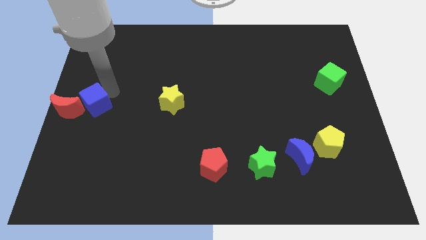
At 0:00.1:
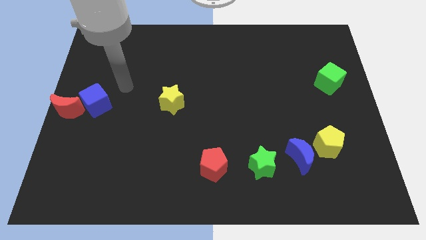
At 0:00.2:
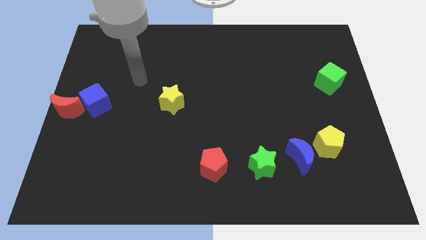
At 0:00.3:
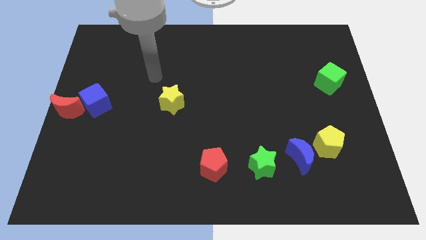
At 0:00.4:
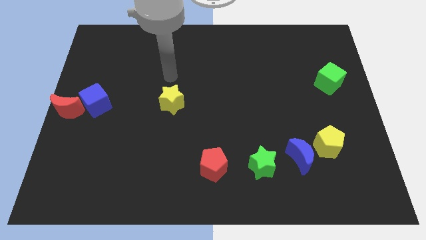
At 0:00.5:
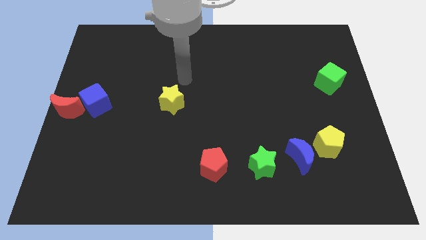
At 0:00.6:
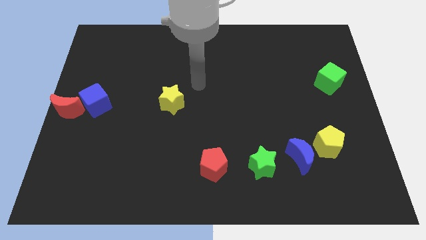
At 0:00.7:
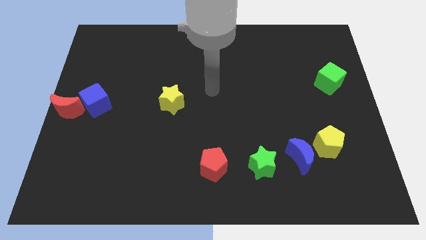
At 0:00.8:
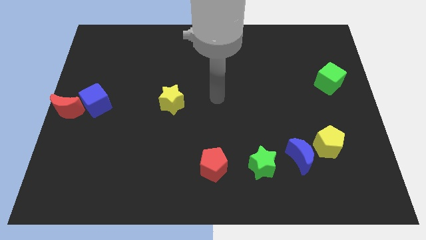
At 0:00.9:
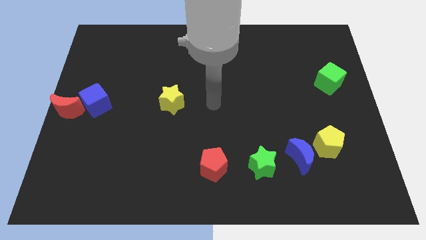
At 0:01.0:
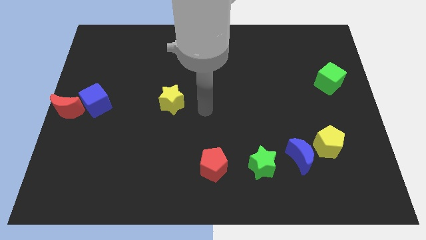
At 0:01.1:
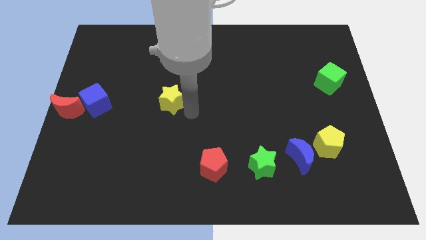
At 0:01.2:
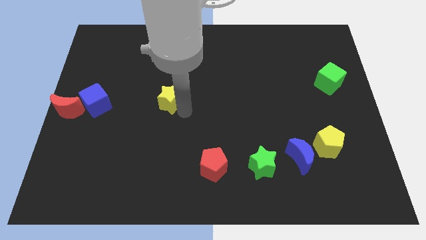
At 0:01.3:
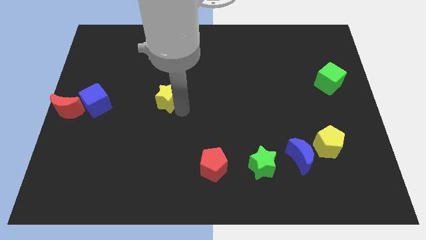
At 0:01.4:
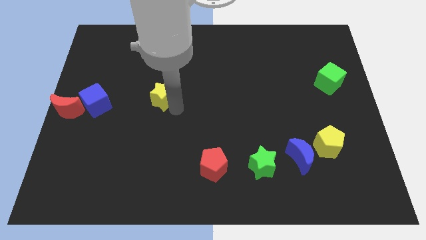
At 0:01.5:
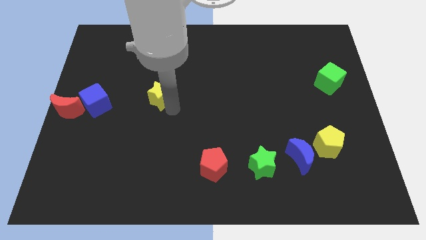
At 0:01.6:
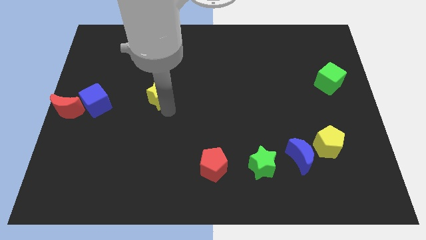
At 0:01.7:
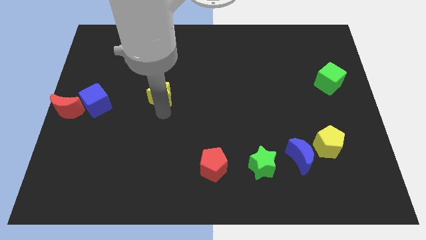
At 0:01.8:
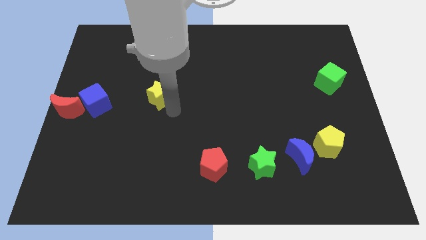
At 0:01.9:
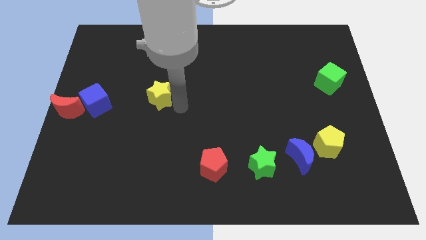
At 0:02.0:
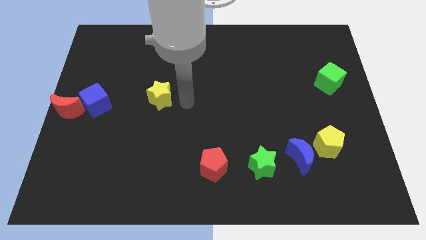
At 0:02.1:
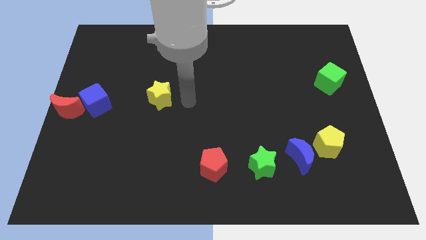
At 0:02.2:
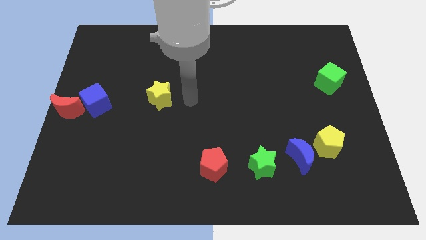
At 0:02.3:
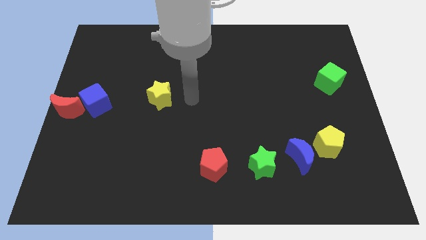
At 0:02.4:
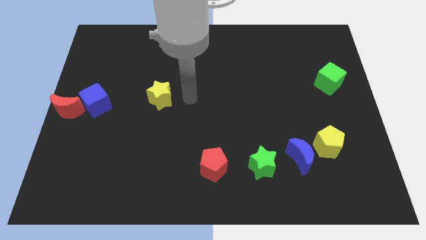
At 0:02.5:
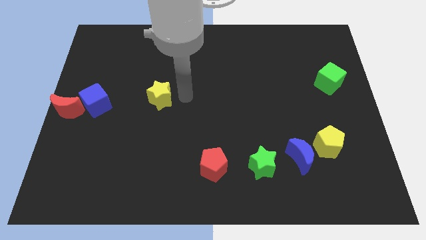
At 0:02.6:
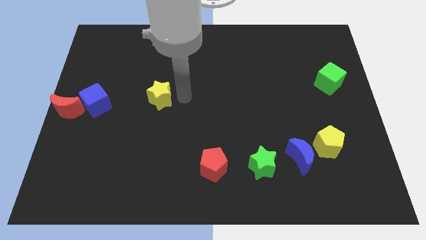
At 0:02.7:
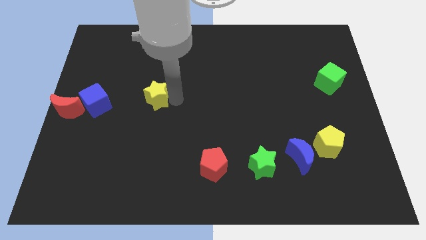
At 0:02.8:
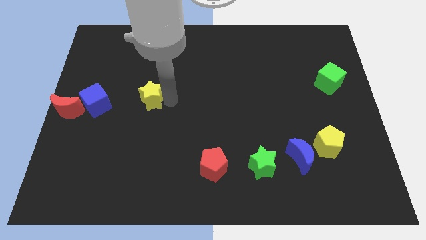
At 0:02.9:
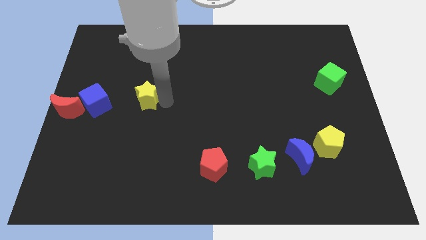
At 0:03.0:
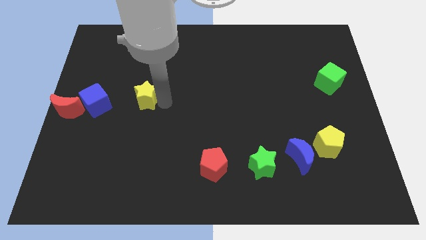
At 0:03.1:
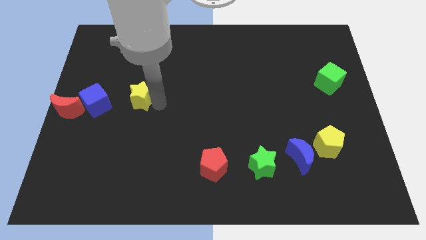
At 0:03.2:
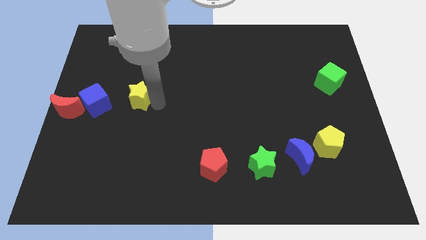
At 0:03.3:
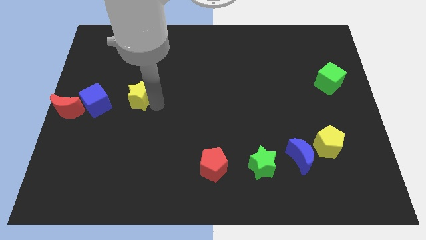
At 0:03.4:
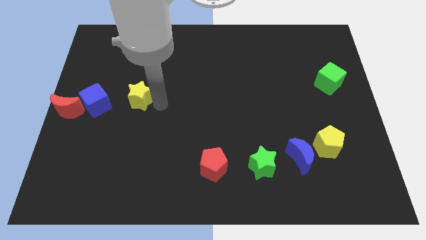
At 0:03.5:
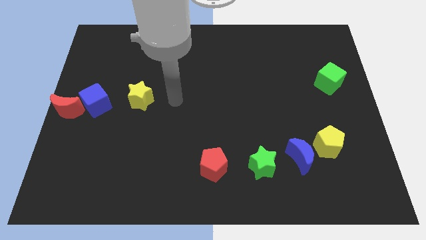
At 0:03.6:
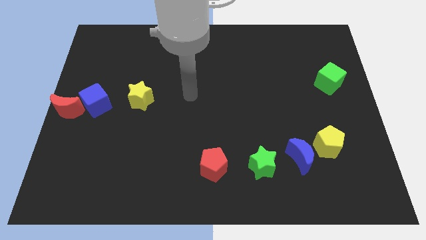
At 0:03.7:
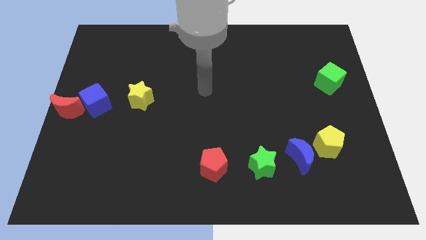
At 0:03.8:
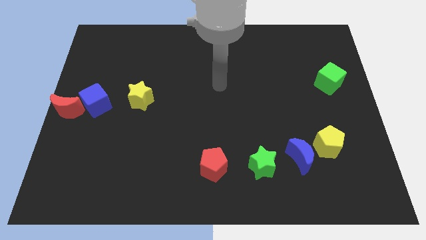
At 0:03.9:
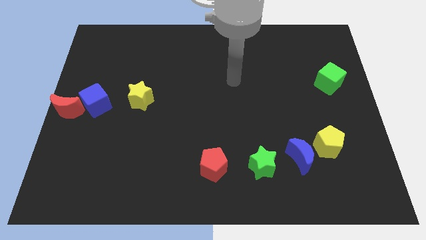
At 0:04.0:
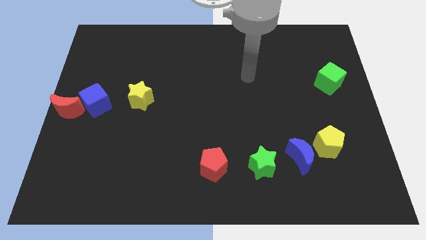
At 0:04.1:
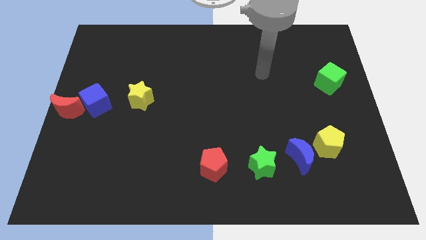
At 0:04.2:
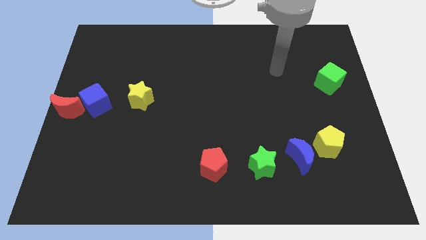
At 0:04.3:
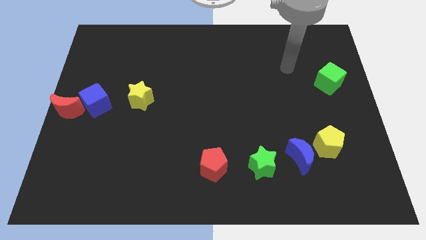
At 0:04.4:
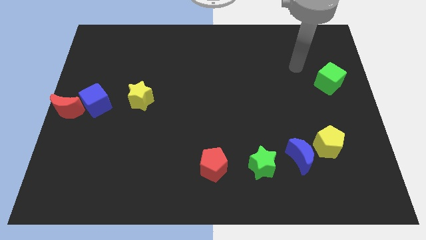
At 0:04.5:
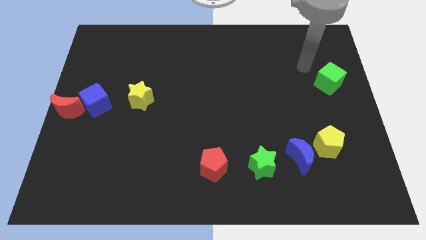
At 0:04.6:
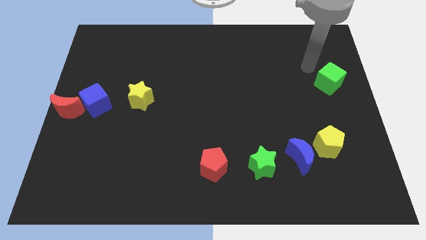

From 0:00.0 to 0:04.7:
push the yellow star towards the left side of the board

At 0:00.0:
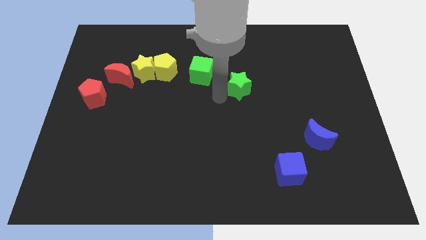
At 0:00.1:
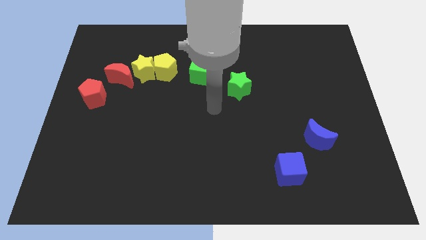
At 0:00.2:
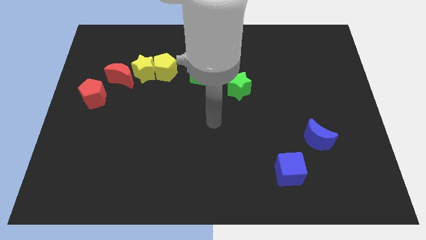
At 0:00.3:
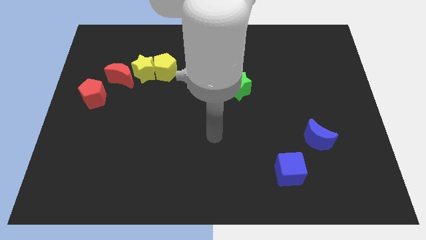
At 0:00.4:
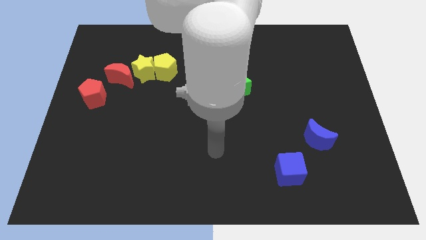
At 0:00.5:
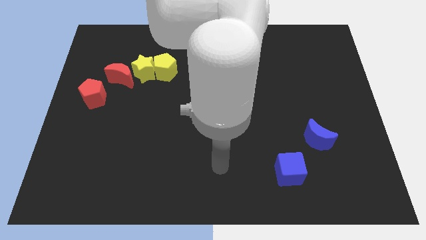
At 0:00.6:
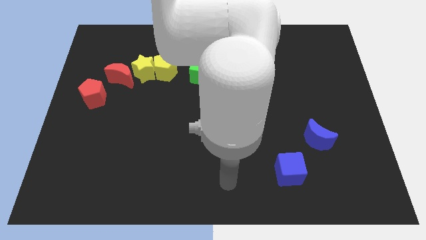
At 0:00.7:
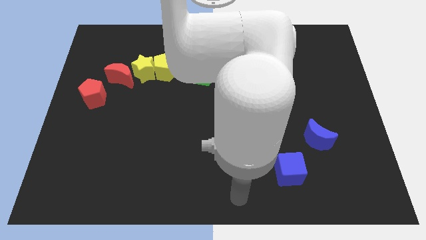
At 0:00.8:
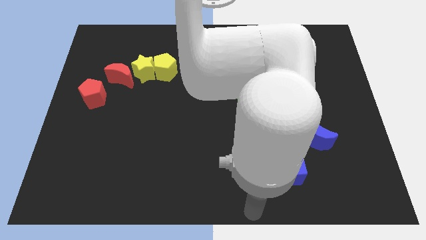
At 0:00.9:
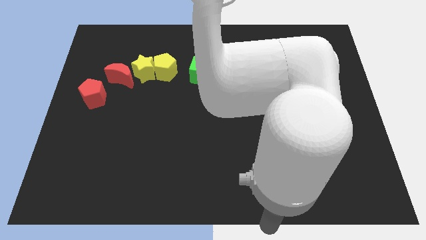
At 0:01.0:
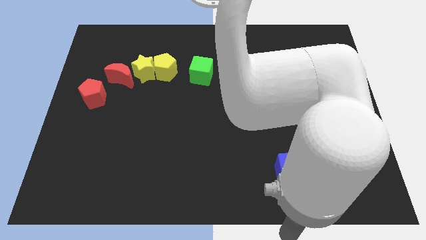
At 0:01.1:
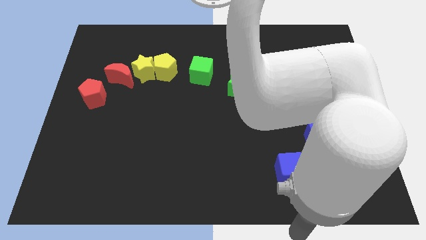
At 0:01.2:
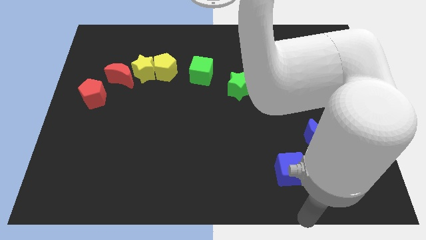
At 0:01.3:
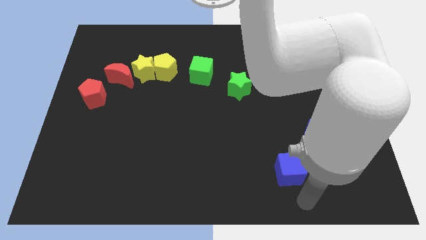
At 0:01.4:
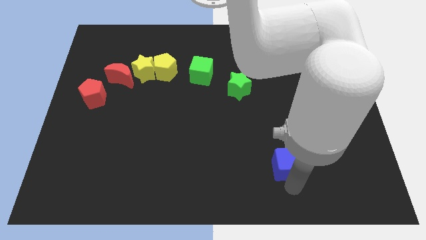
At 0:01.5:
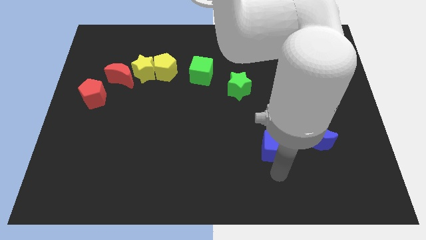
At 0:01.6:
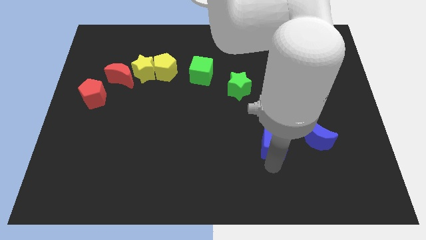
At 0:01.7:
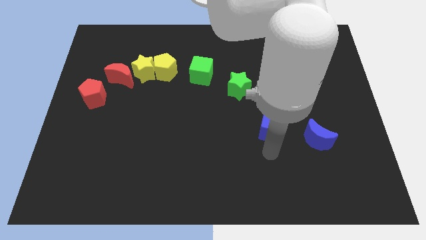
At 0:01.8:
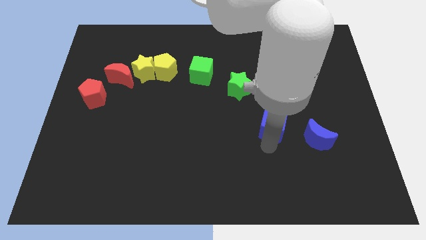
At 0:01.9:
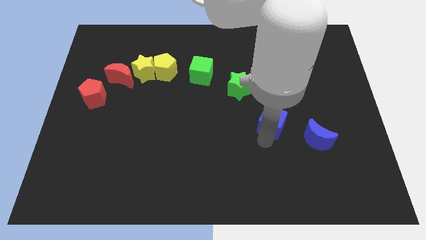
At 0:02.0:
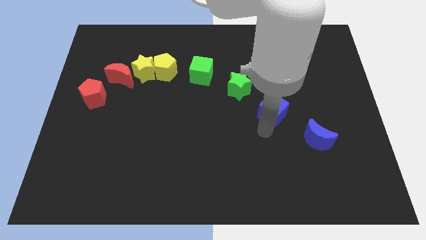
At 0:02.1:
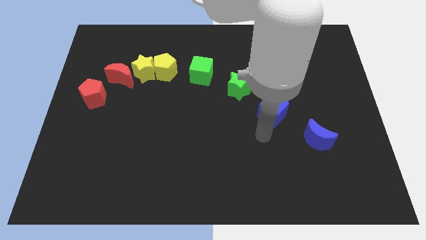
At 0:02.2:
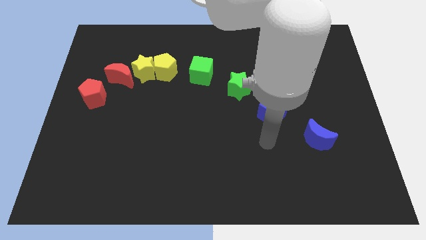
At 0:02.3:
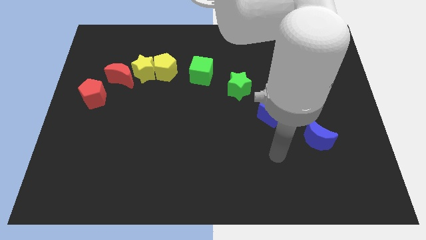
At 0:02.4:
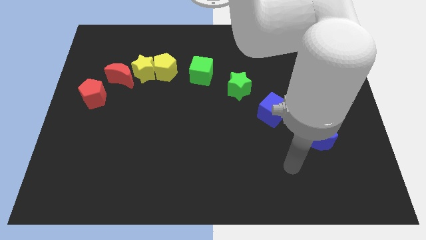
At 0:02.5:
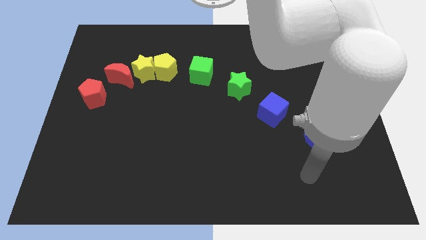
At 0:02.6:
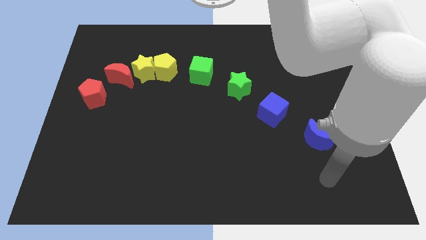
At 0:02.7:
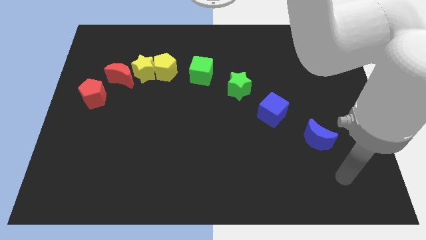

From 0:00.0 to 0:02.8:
move the blue cube towards the top side of the board

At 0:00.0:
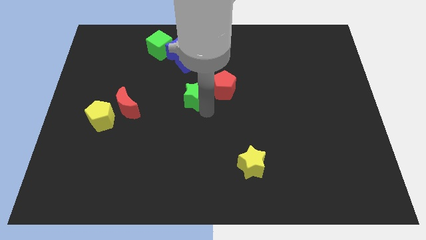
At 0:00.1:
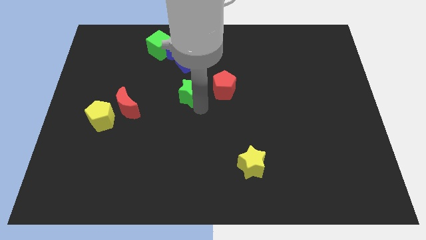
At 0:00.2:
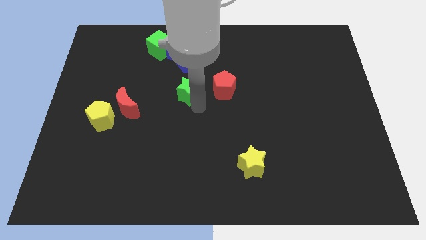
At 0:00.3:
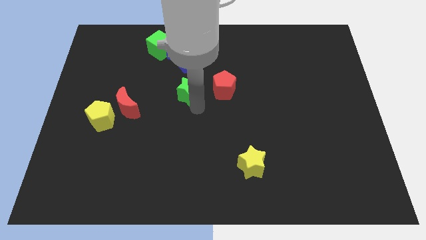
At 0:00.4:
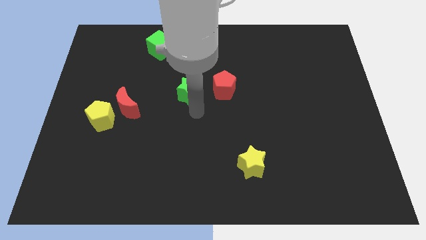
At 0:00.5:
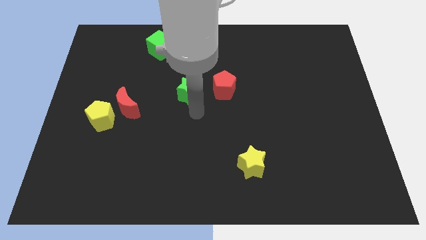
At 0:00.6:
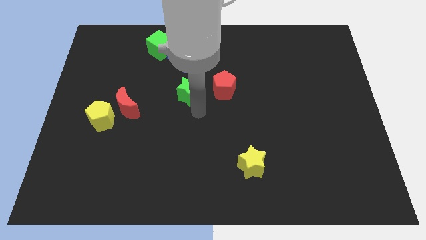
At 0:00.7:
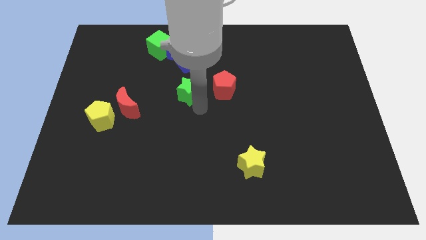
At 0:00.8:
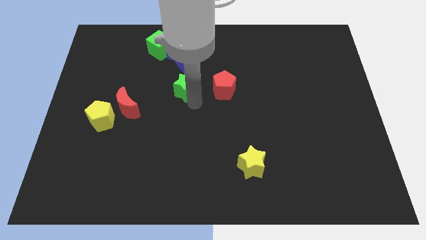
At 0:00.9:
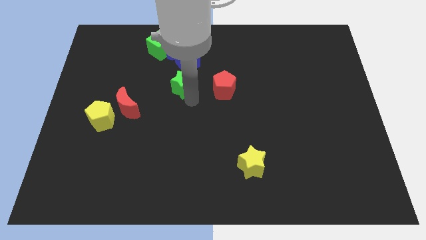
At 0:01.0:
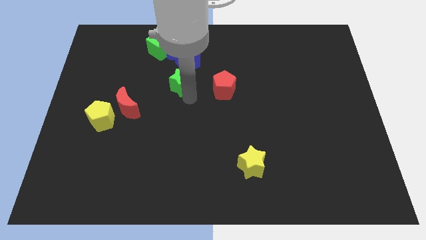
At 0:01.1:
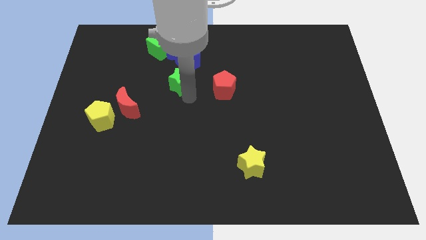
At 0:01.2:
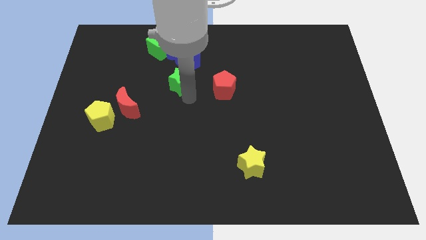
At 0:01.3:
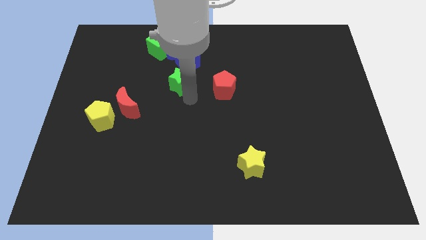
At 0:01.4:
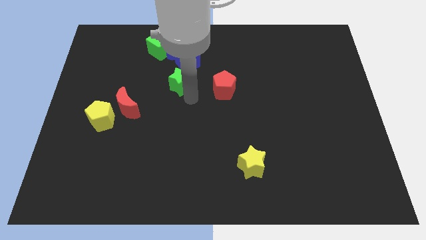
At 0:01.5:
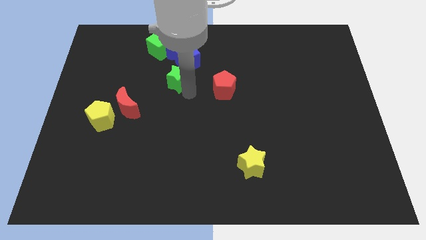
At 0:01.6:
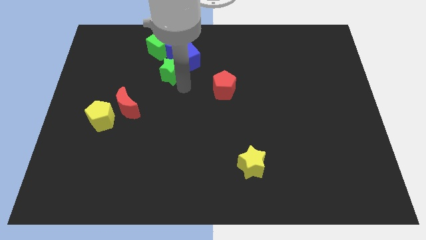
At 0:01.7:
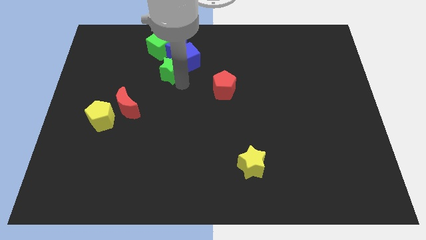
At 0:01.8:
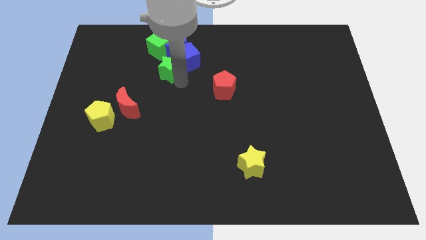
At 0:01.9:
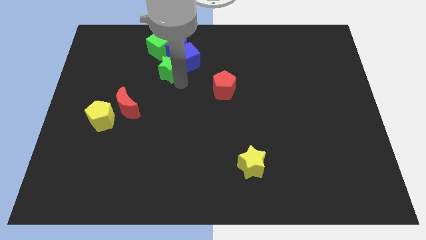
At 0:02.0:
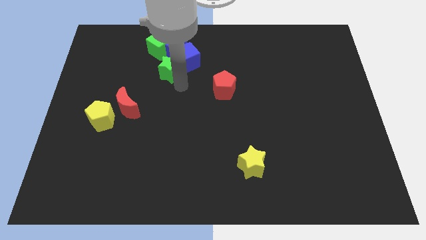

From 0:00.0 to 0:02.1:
place the green star below the blue cube
